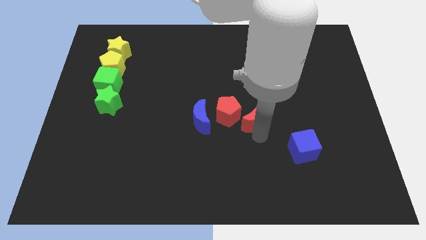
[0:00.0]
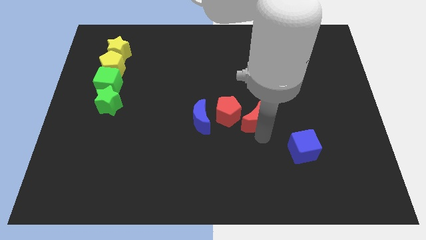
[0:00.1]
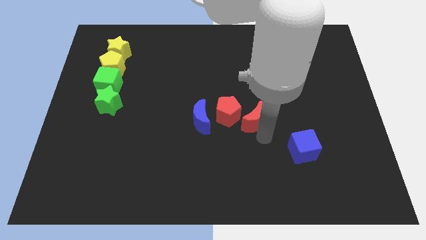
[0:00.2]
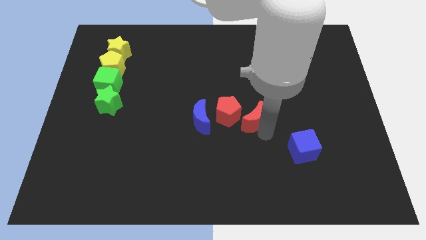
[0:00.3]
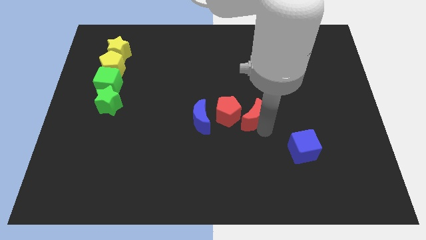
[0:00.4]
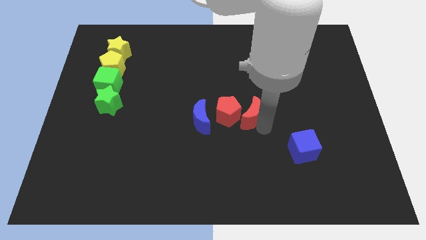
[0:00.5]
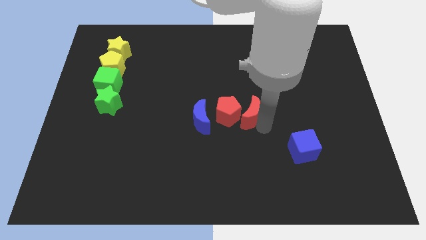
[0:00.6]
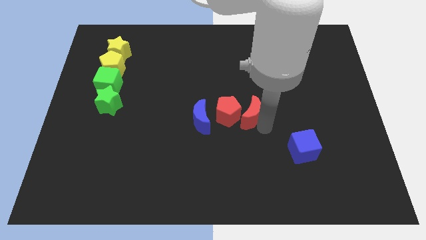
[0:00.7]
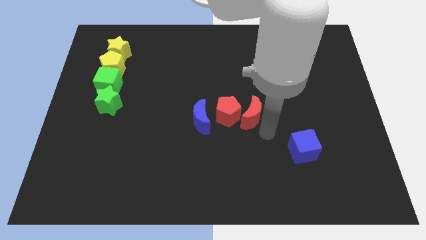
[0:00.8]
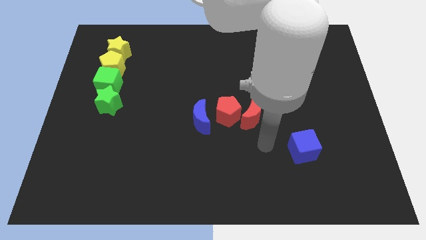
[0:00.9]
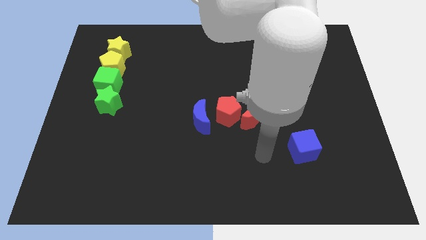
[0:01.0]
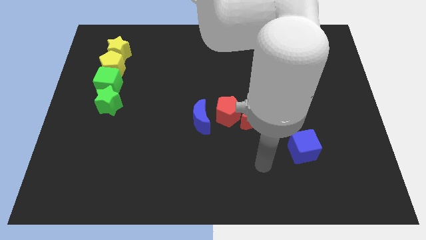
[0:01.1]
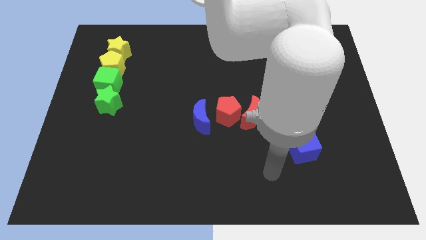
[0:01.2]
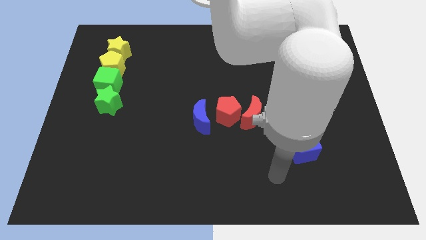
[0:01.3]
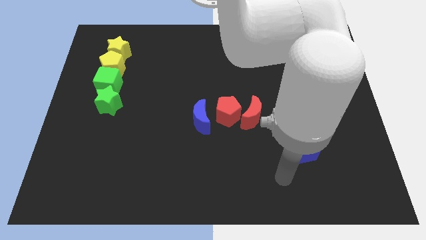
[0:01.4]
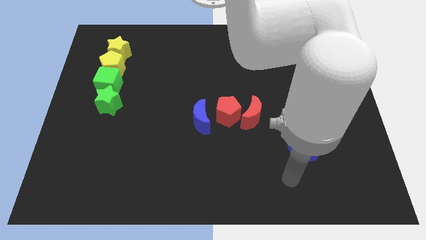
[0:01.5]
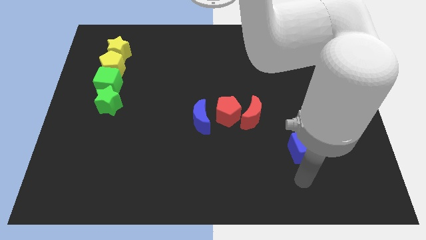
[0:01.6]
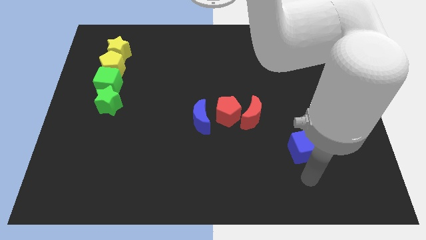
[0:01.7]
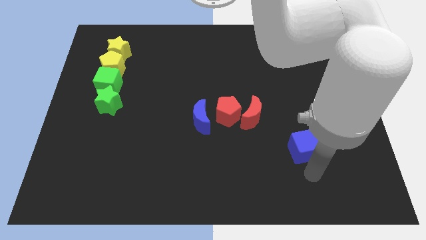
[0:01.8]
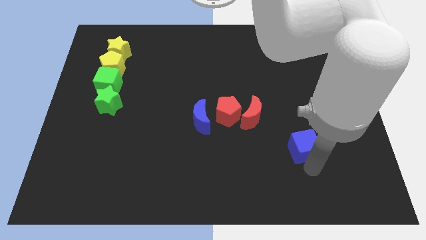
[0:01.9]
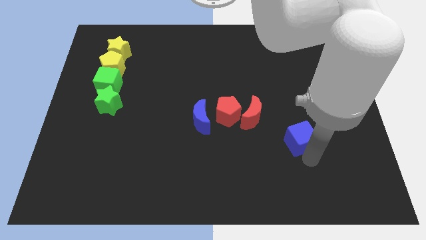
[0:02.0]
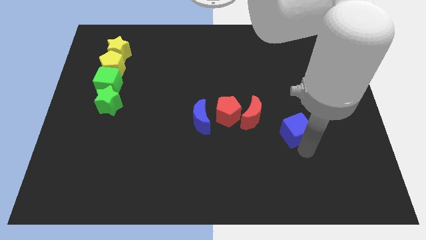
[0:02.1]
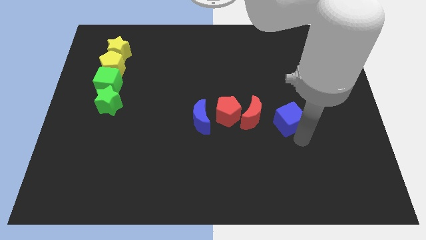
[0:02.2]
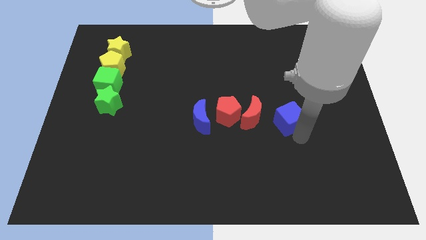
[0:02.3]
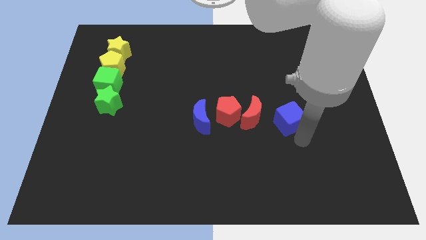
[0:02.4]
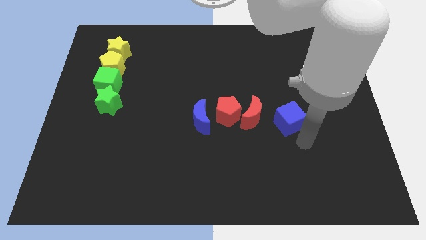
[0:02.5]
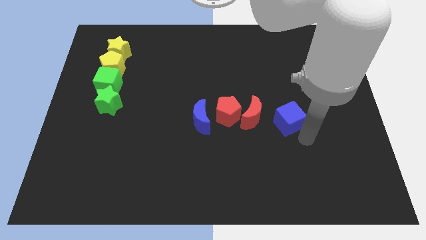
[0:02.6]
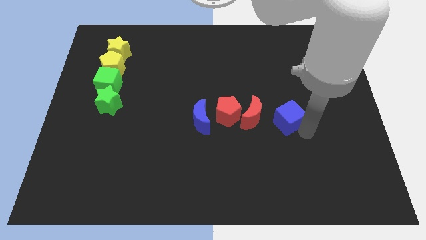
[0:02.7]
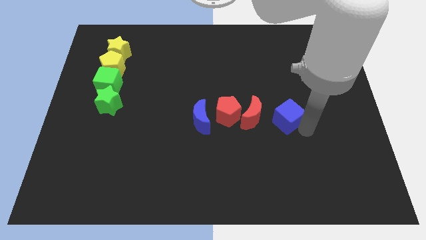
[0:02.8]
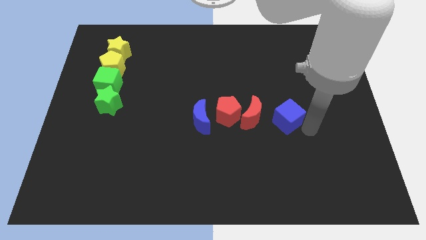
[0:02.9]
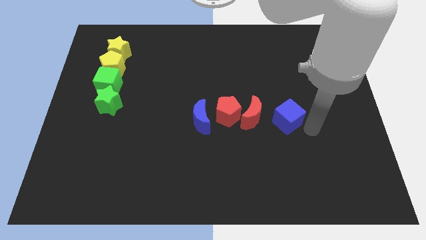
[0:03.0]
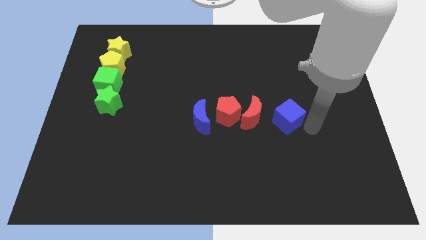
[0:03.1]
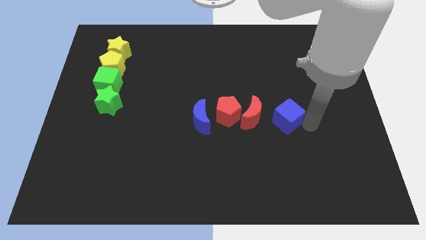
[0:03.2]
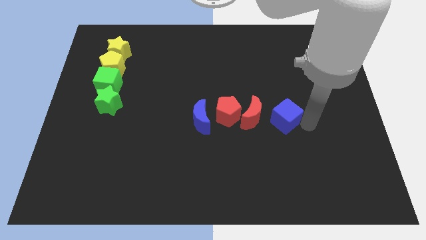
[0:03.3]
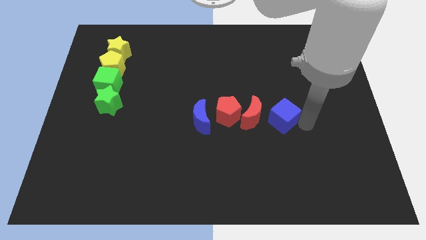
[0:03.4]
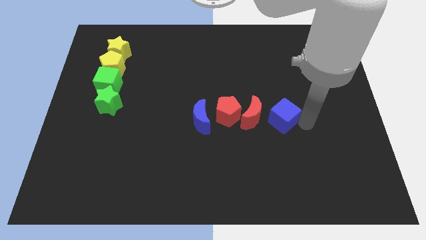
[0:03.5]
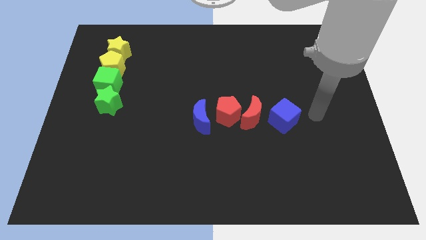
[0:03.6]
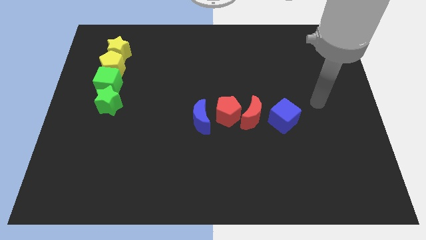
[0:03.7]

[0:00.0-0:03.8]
push the blue cube towards the red moon

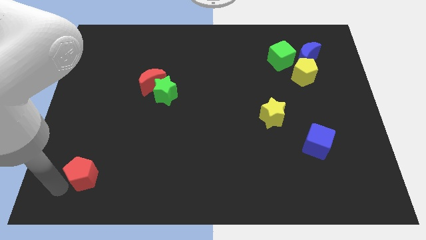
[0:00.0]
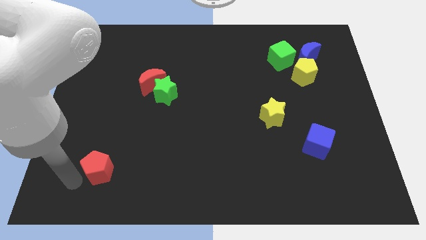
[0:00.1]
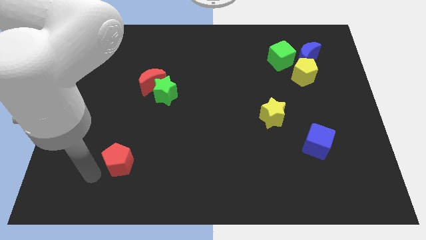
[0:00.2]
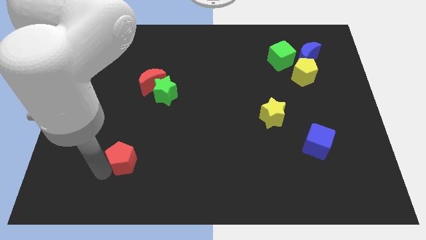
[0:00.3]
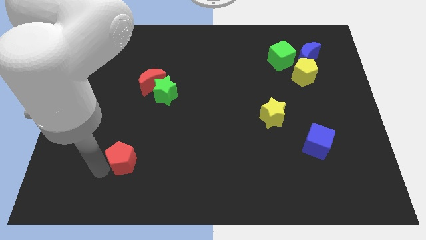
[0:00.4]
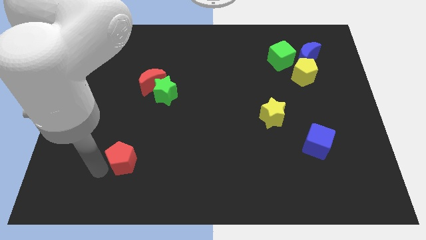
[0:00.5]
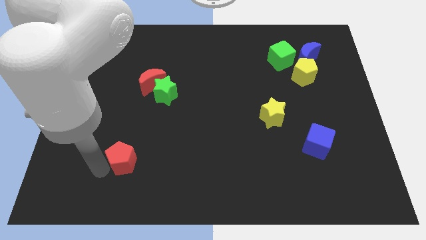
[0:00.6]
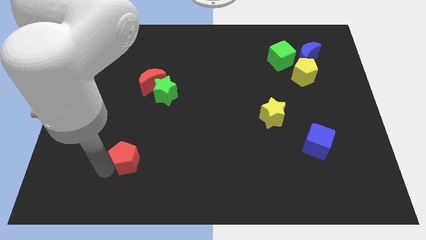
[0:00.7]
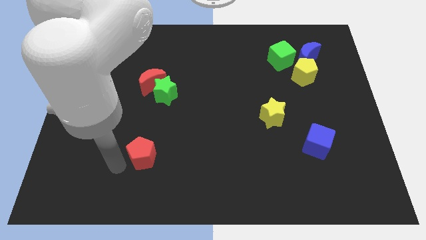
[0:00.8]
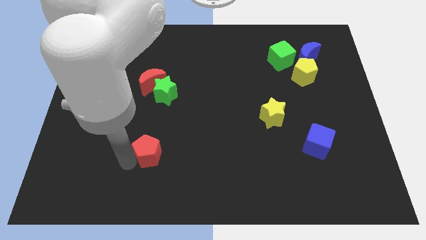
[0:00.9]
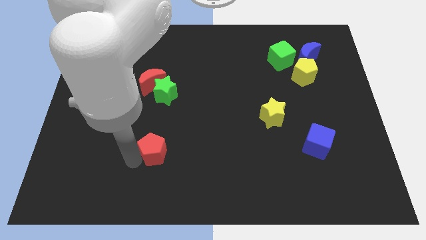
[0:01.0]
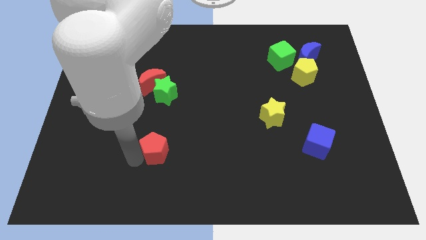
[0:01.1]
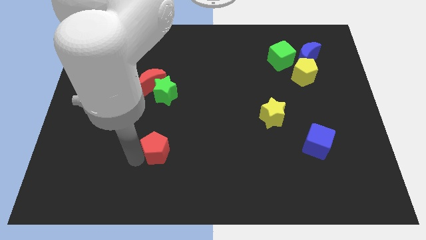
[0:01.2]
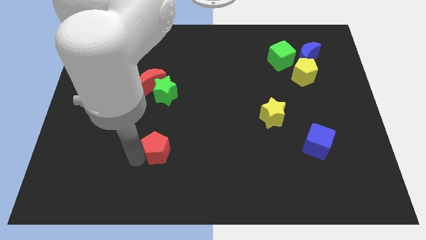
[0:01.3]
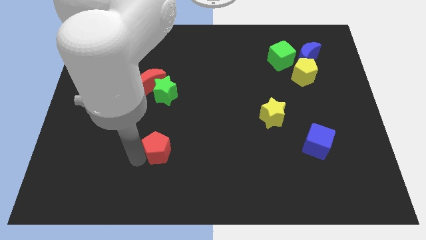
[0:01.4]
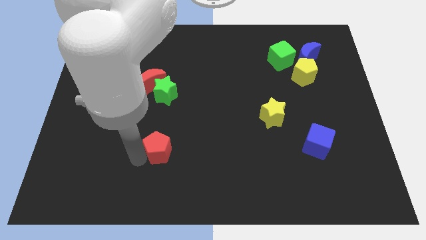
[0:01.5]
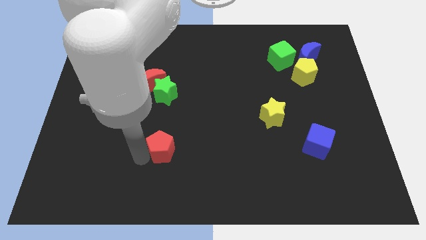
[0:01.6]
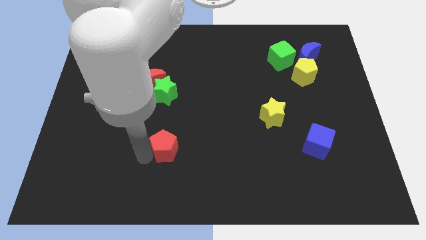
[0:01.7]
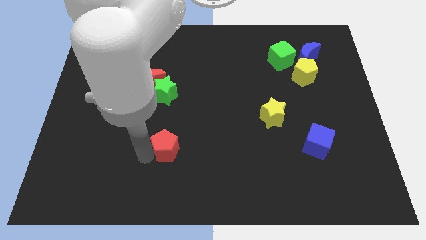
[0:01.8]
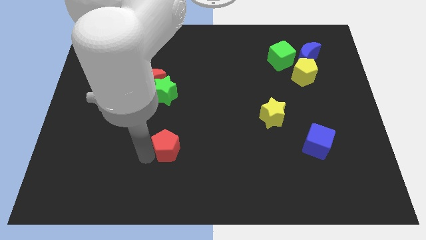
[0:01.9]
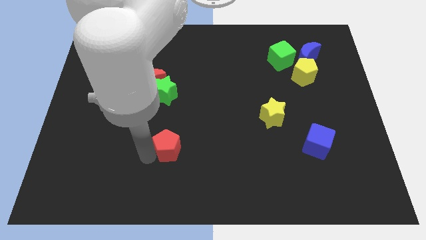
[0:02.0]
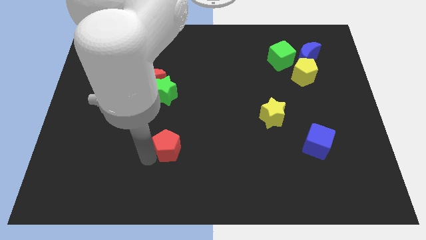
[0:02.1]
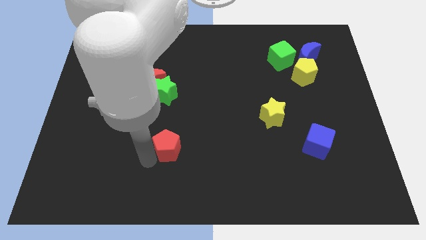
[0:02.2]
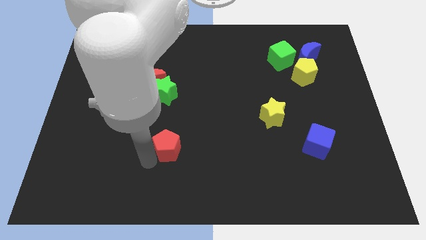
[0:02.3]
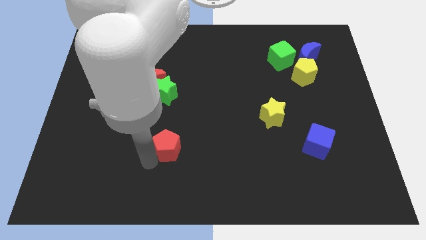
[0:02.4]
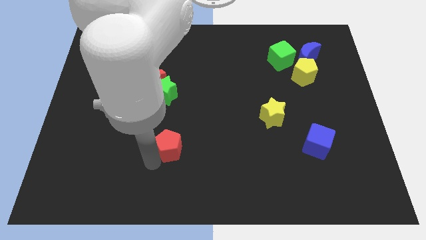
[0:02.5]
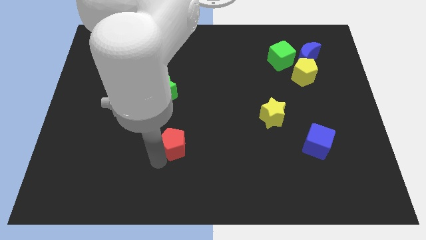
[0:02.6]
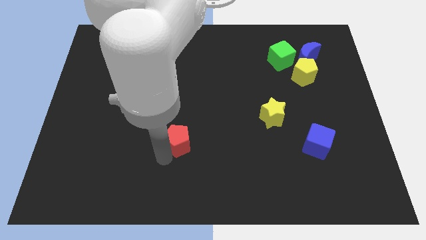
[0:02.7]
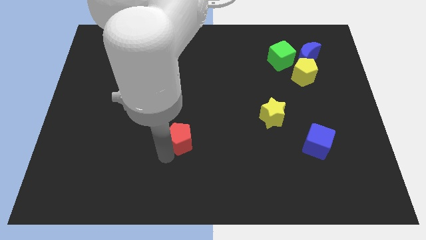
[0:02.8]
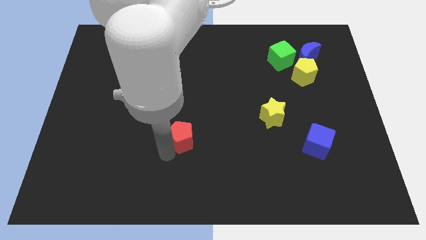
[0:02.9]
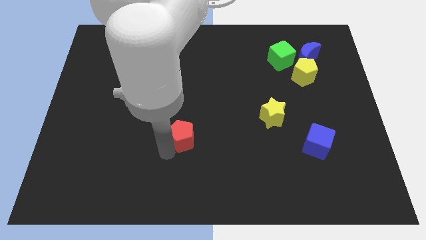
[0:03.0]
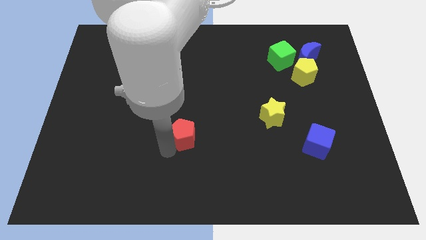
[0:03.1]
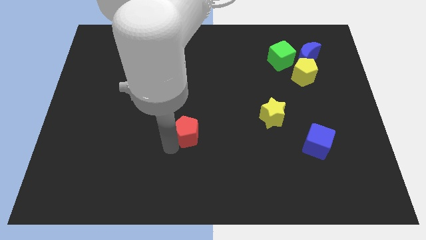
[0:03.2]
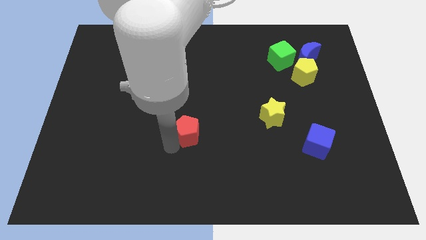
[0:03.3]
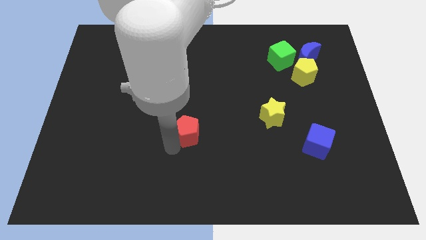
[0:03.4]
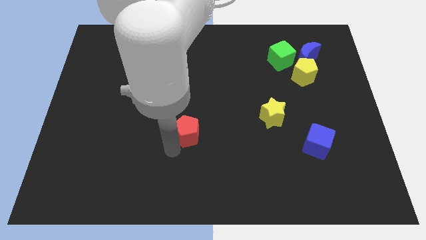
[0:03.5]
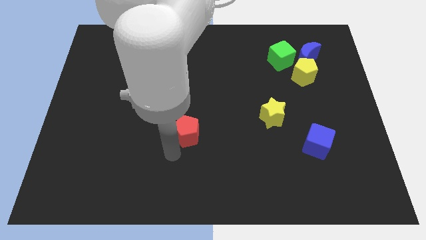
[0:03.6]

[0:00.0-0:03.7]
move the red pentagon parallel to the green star

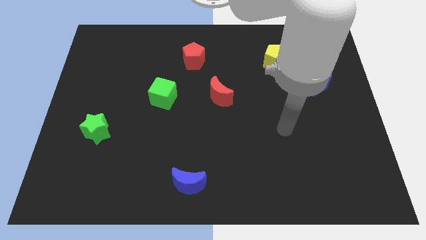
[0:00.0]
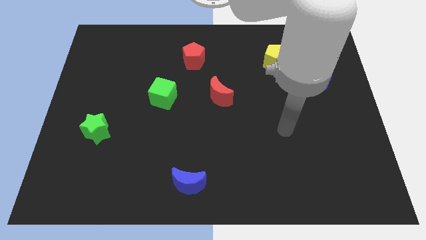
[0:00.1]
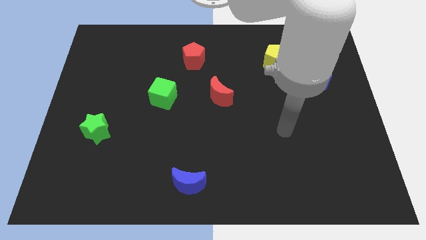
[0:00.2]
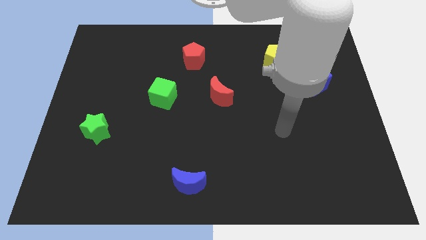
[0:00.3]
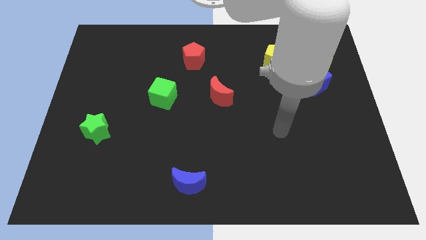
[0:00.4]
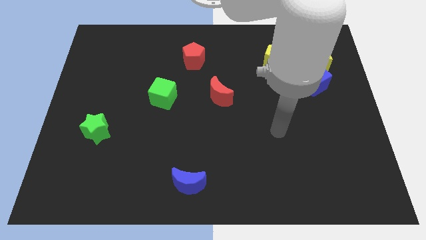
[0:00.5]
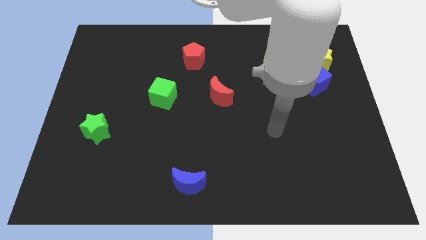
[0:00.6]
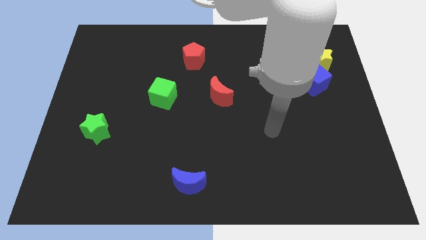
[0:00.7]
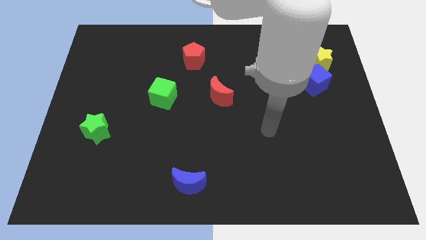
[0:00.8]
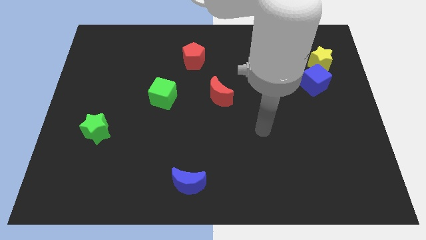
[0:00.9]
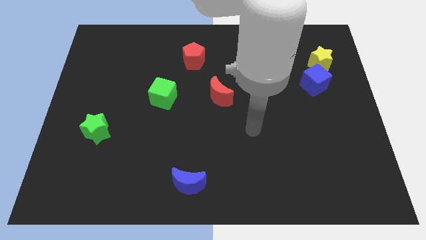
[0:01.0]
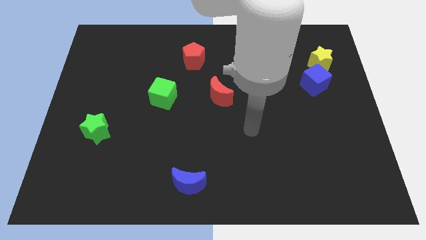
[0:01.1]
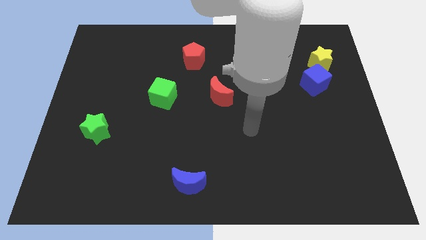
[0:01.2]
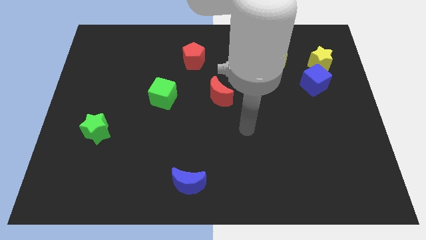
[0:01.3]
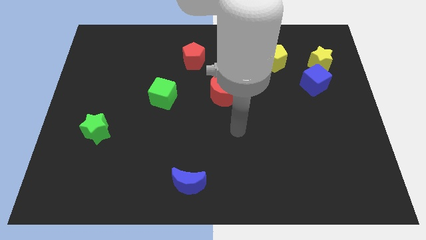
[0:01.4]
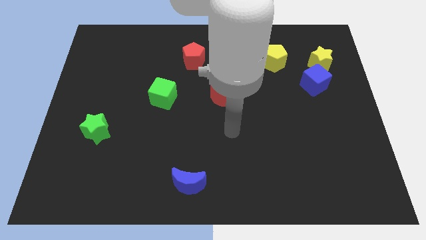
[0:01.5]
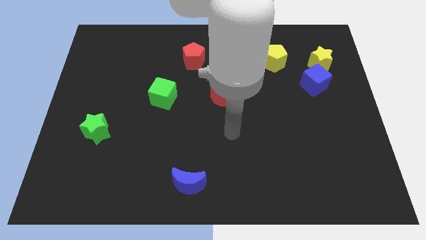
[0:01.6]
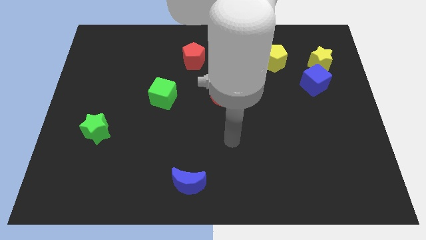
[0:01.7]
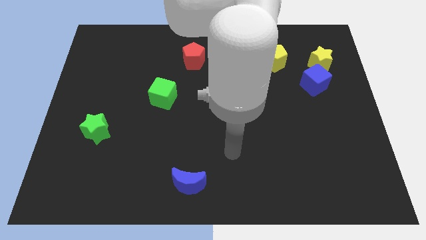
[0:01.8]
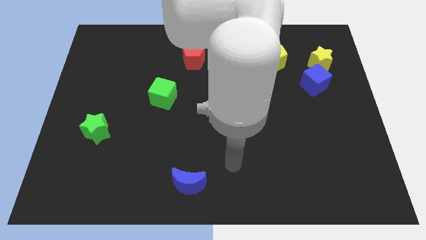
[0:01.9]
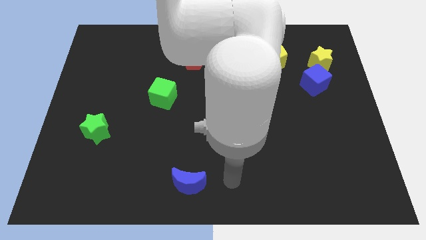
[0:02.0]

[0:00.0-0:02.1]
point your hand at the right of the blue crescent
